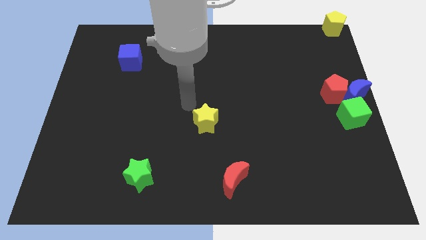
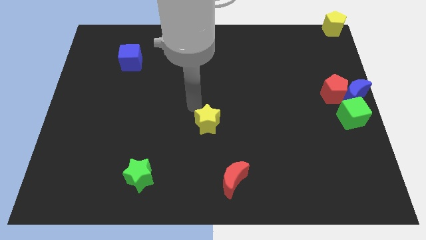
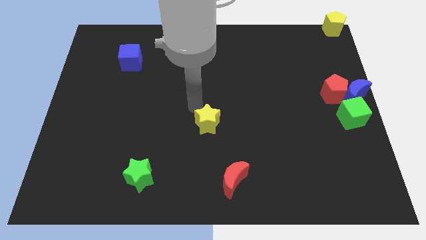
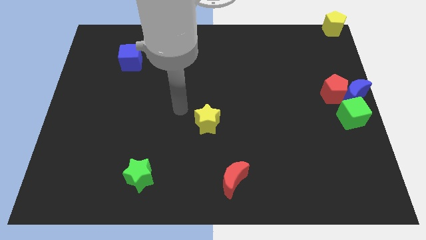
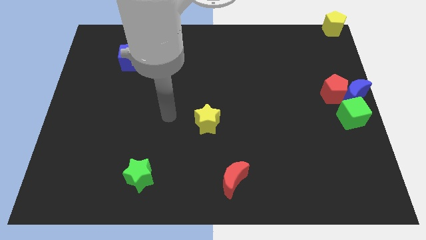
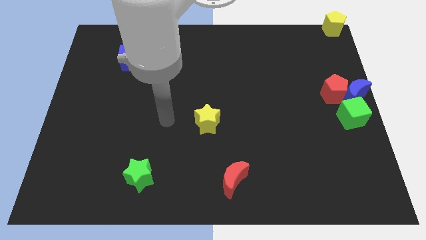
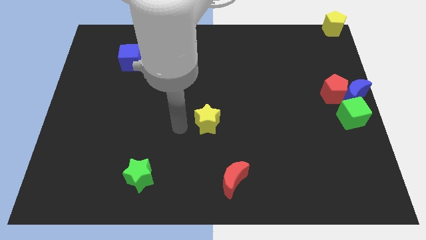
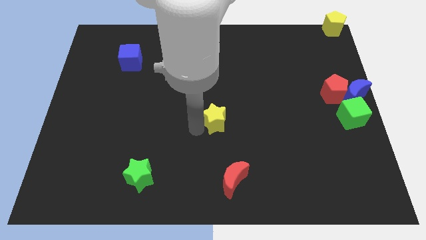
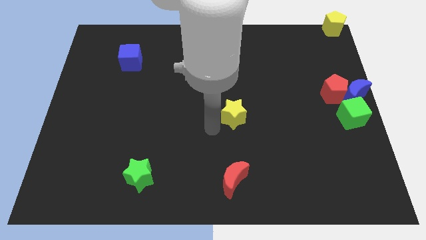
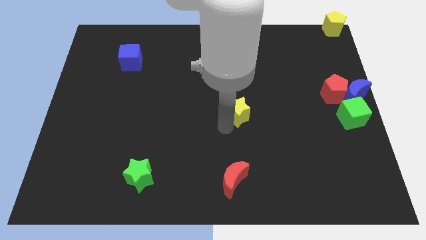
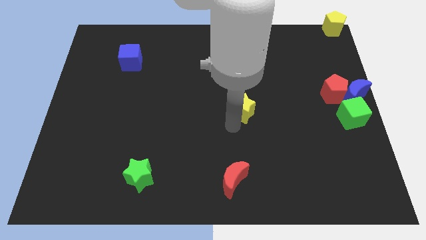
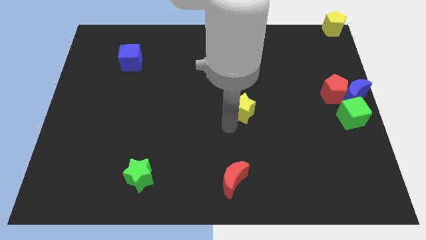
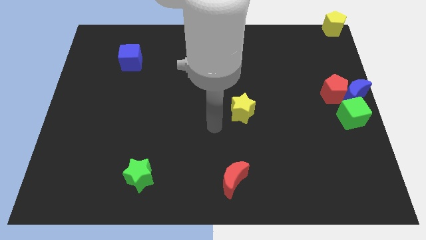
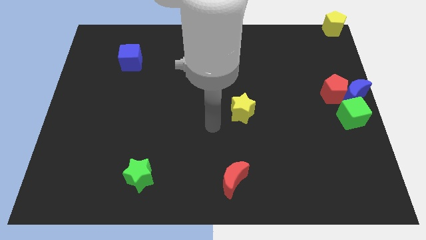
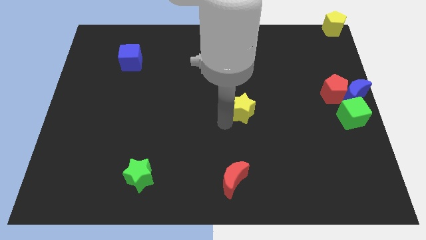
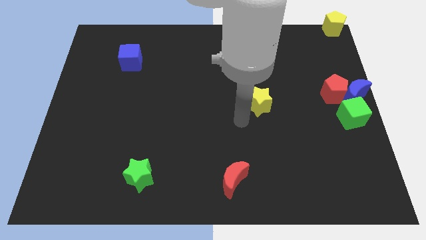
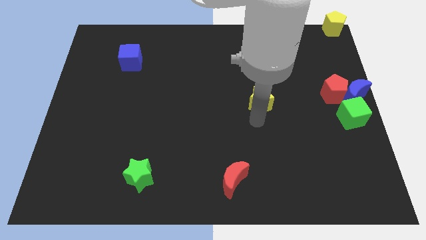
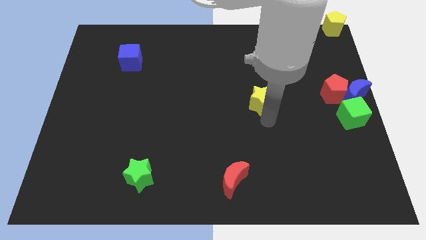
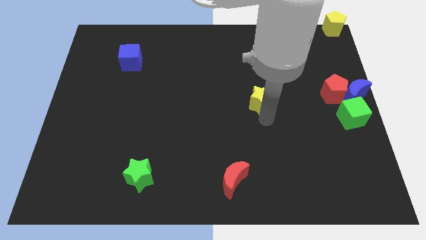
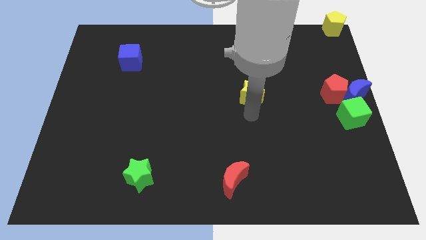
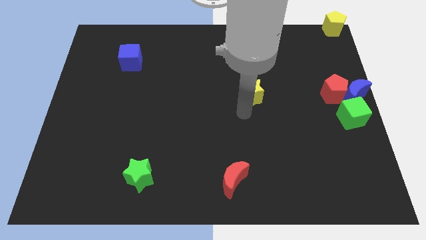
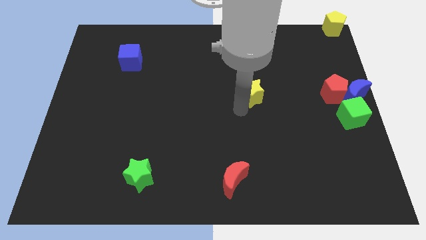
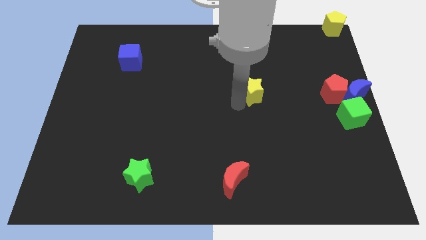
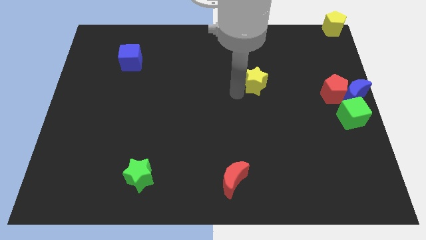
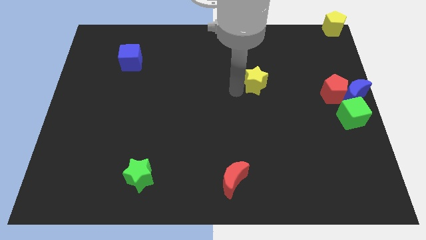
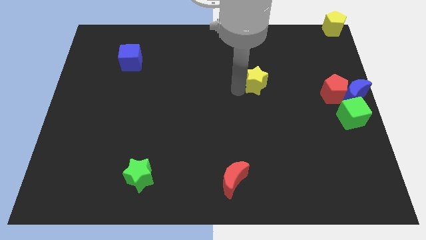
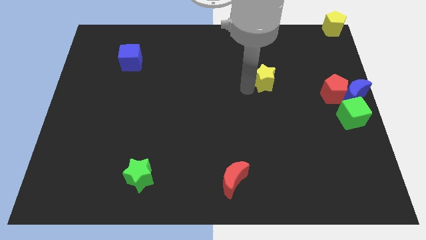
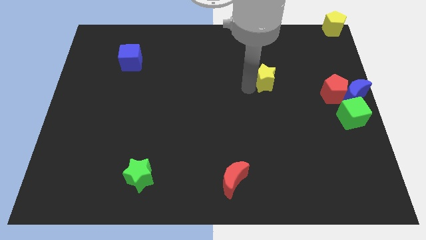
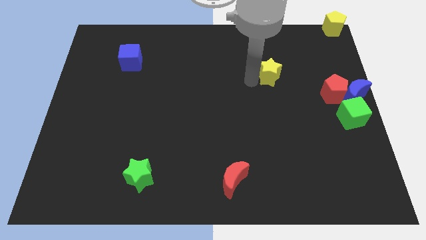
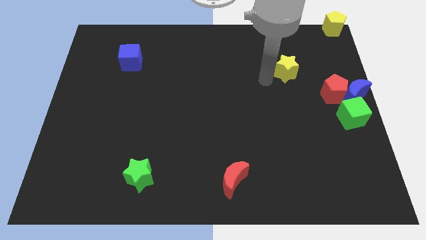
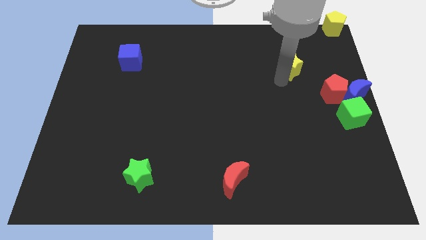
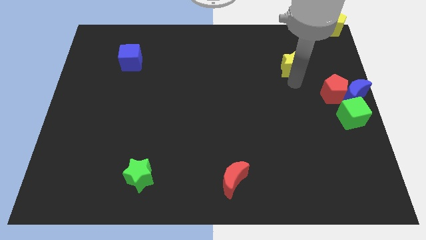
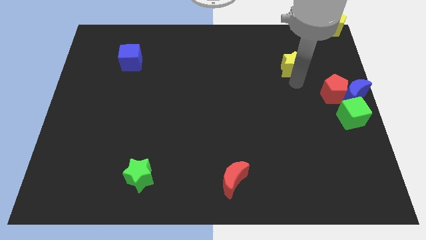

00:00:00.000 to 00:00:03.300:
move the yellow star towards the bottom left to the yellow pentagon

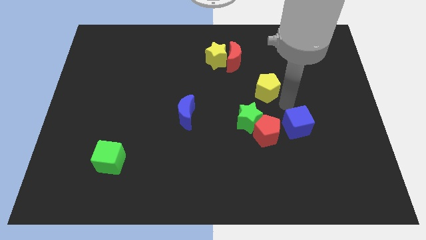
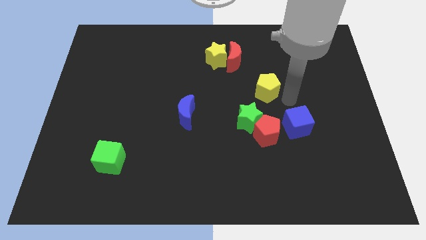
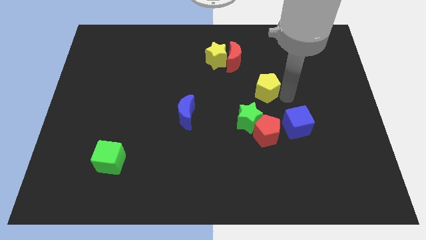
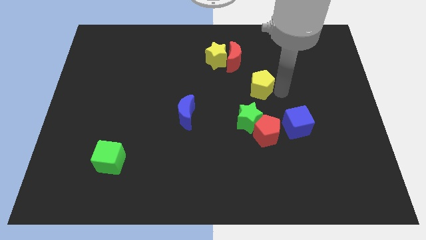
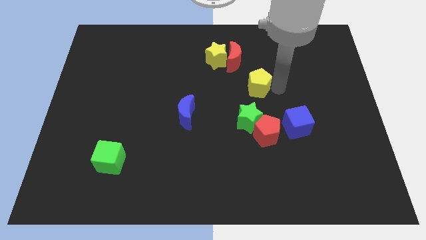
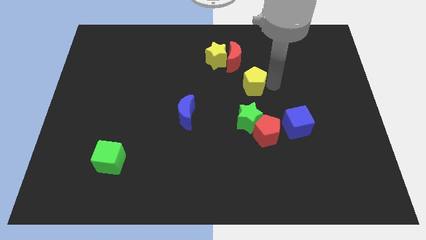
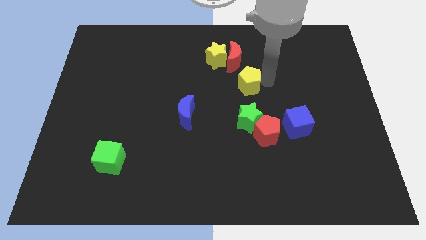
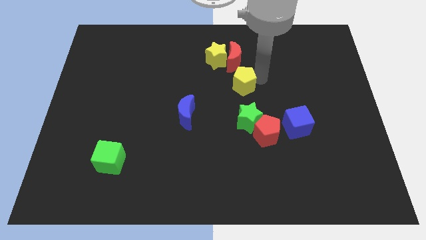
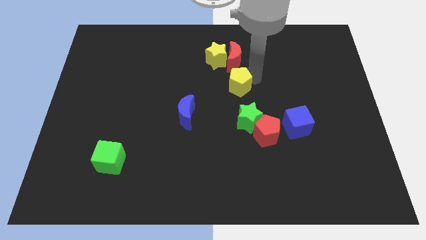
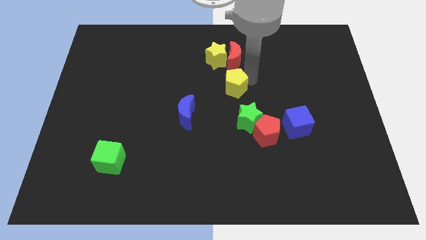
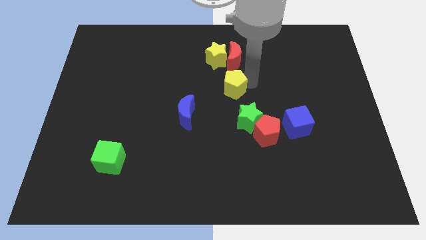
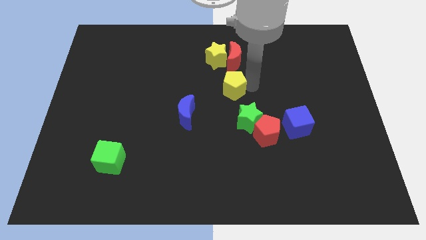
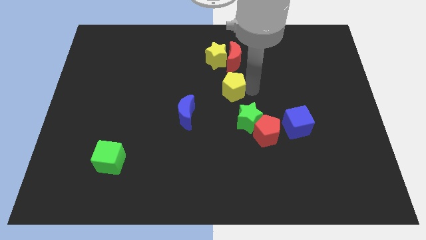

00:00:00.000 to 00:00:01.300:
place the yellow pentagon below the red moon

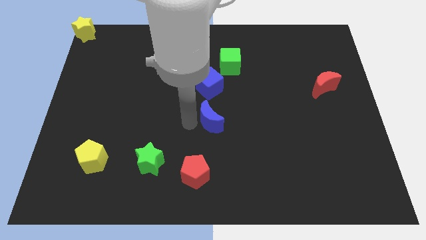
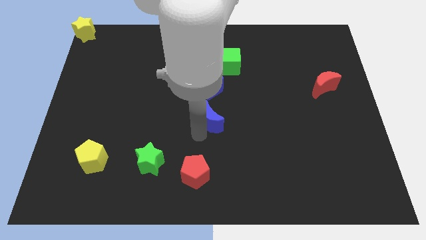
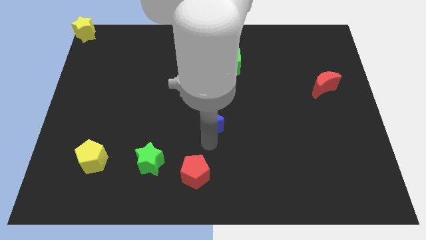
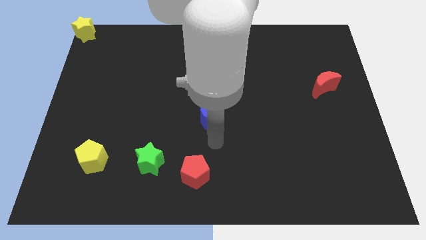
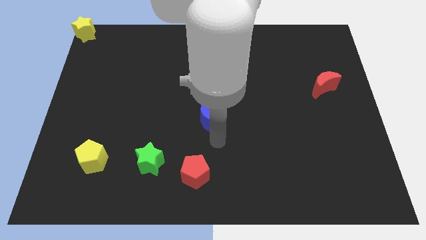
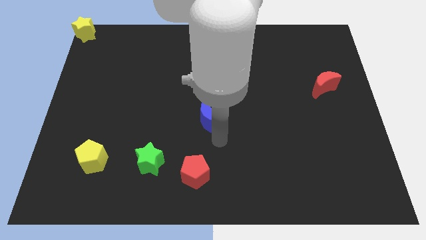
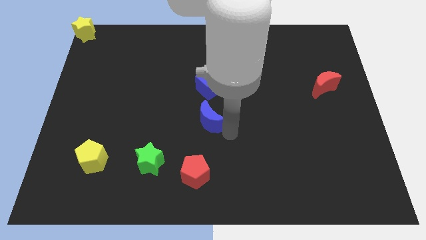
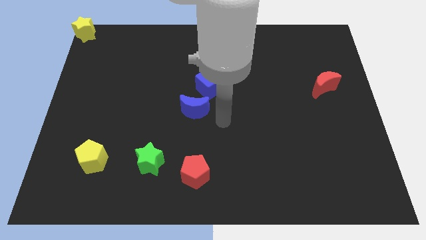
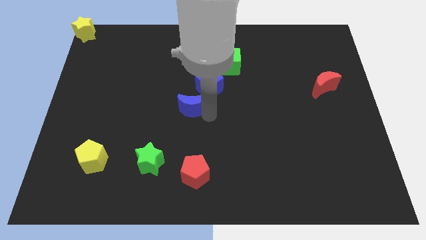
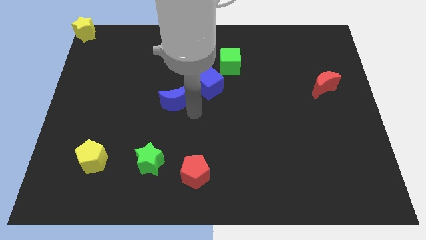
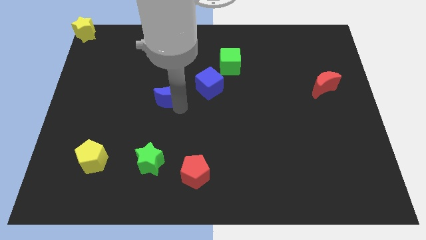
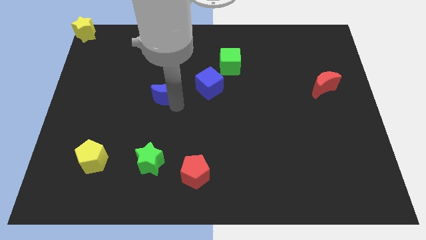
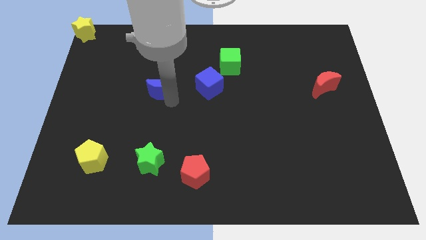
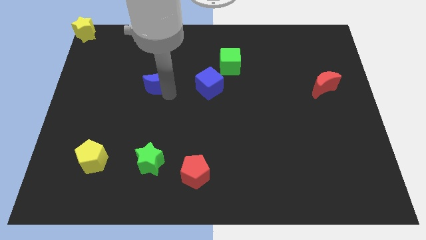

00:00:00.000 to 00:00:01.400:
place the blue moon above the green star

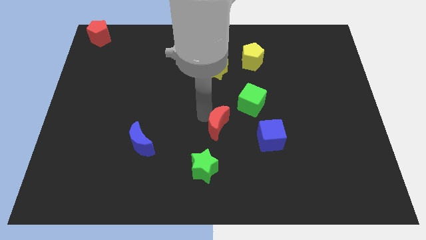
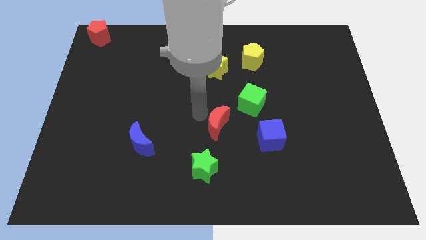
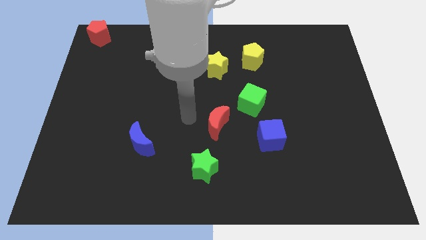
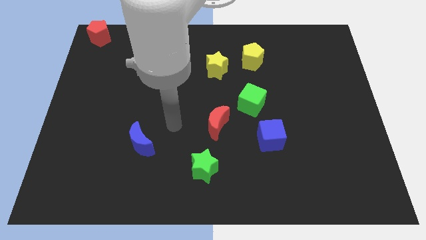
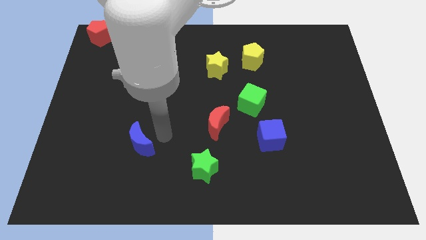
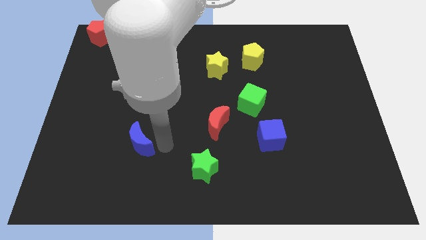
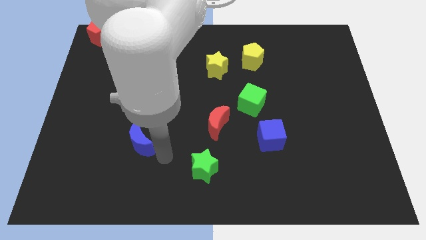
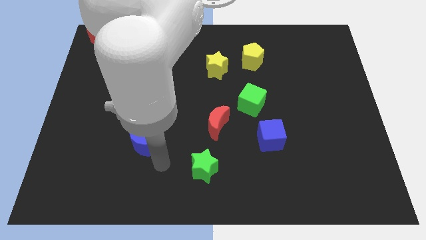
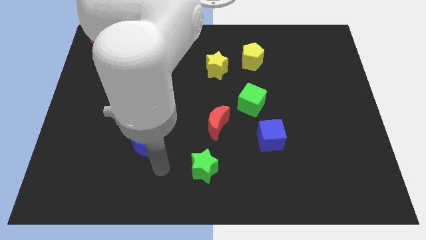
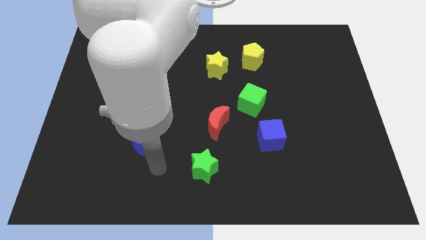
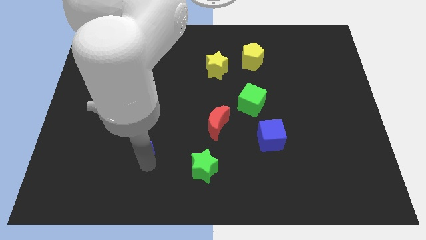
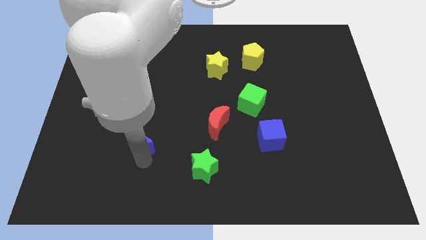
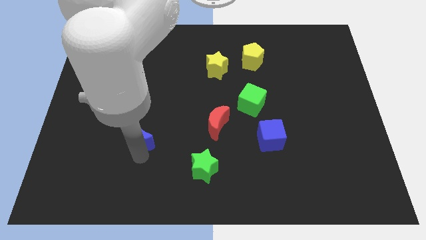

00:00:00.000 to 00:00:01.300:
tap the blue crescent

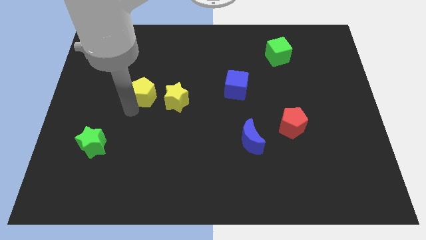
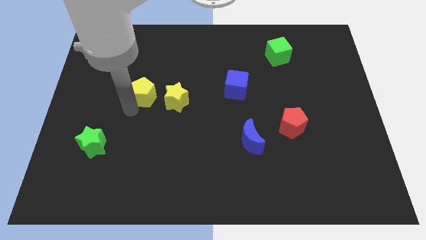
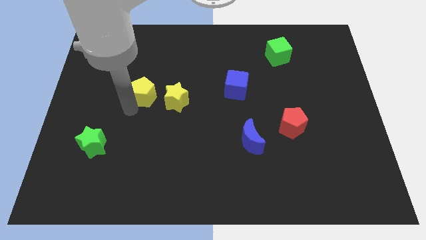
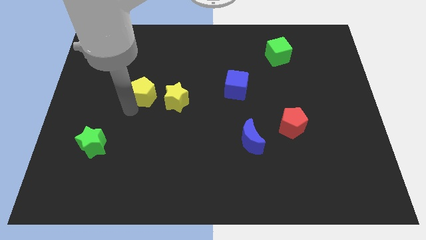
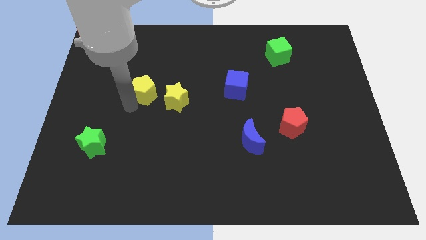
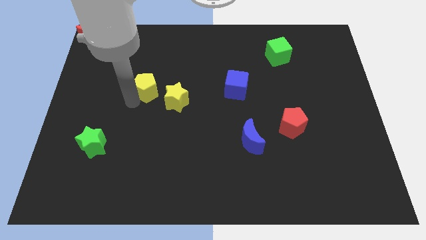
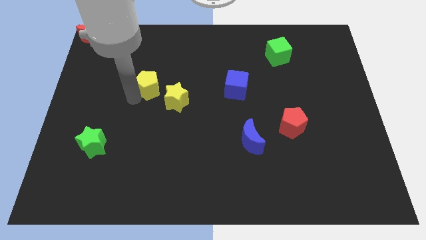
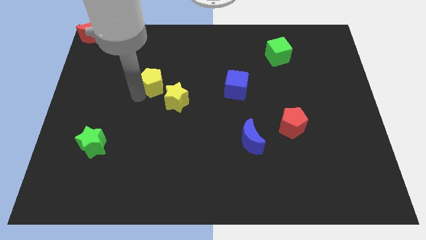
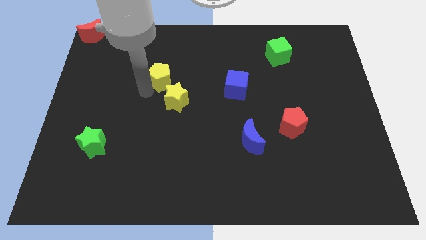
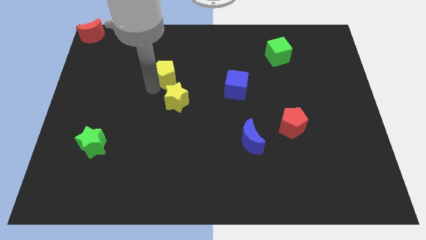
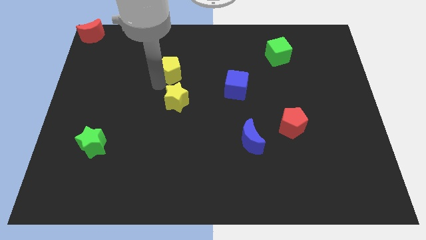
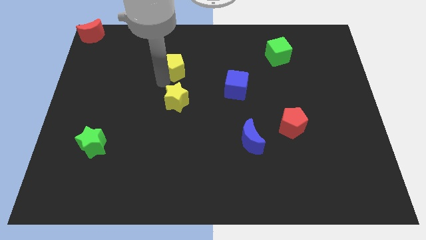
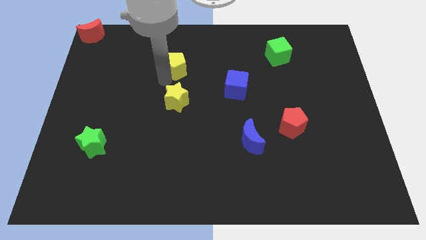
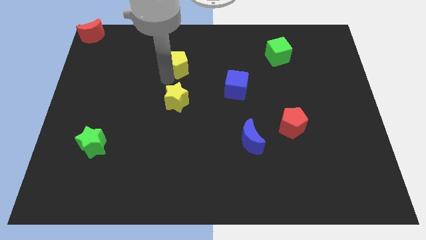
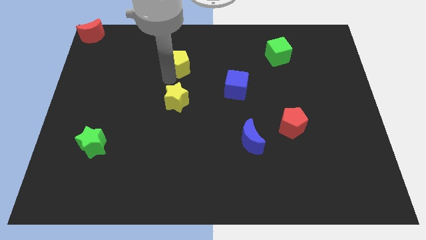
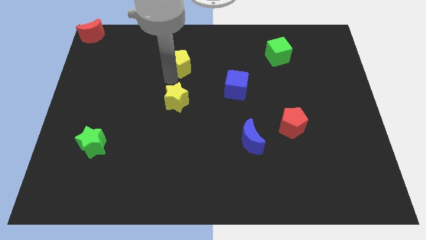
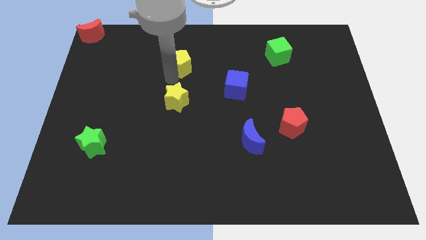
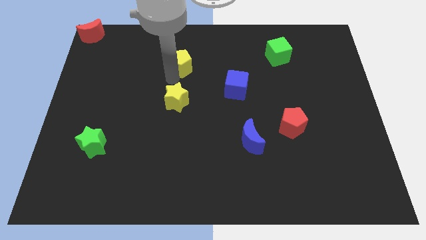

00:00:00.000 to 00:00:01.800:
put the yellow pentagon above the yellow star

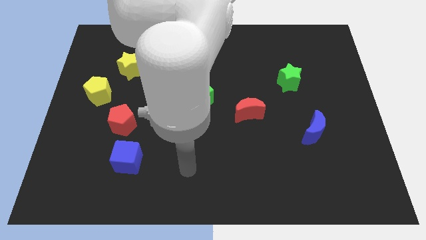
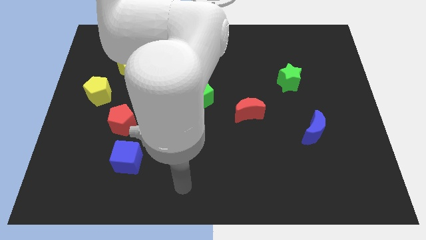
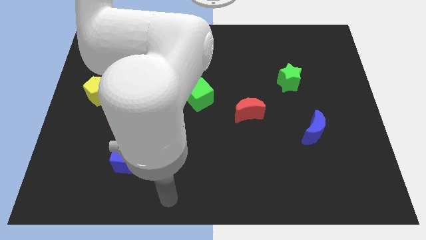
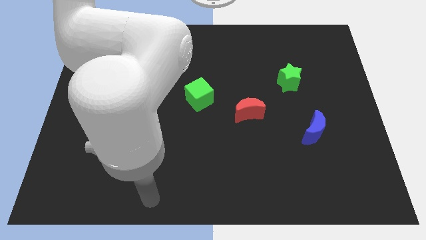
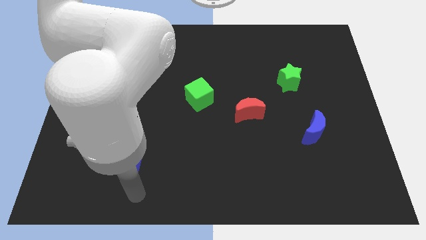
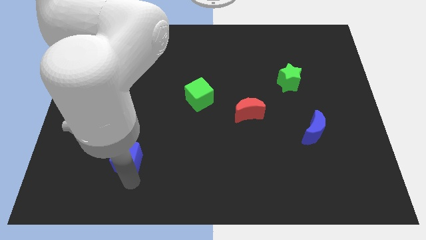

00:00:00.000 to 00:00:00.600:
place your arm at the bottom of blue cube
